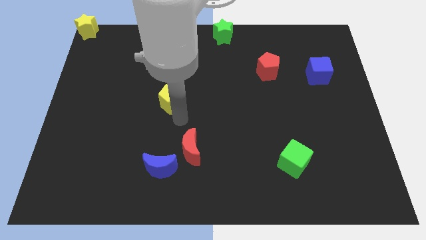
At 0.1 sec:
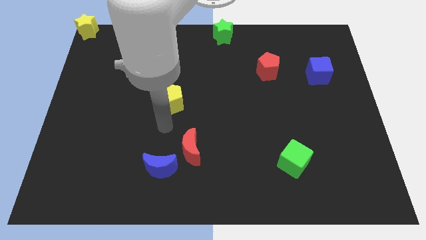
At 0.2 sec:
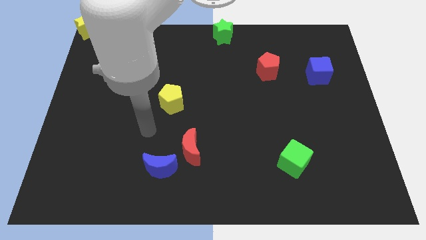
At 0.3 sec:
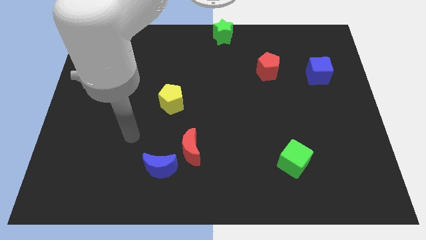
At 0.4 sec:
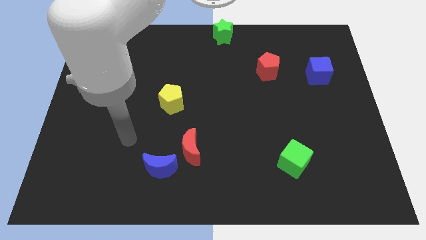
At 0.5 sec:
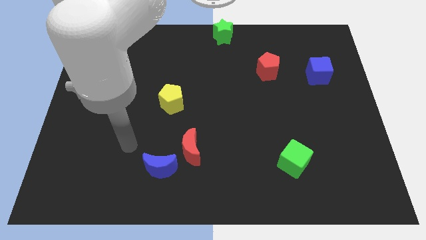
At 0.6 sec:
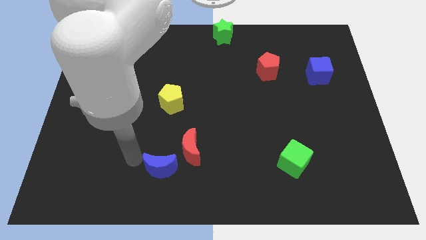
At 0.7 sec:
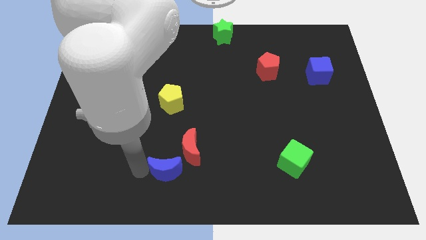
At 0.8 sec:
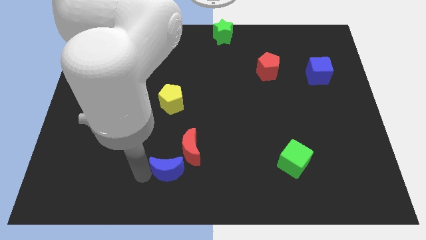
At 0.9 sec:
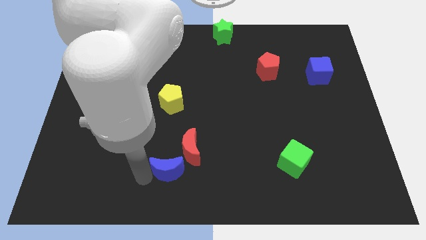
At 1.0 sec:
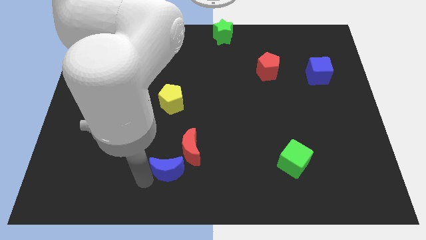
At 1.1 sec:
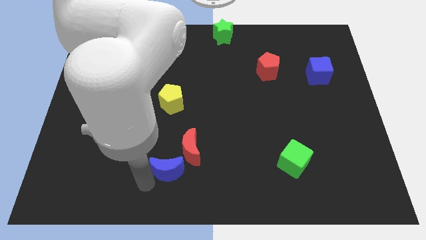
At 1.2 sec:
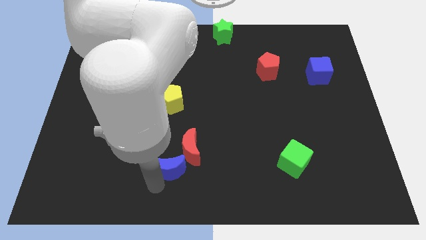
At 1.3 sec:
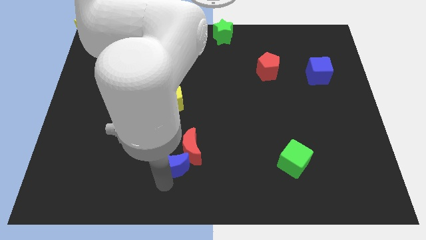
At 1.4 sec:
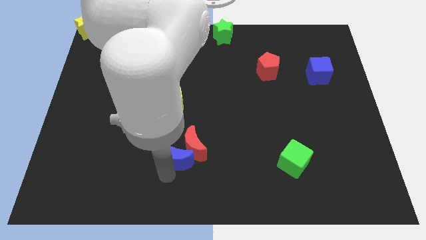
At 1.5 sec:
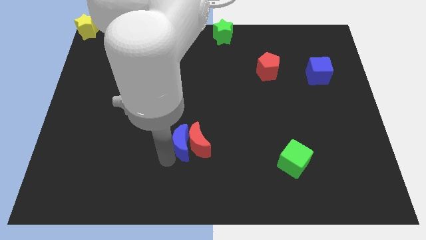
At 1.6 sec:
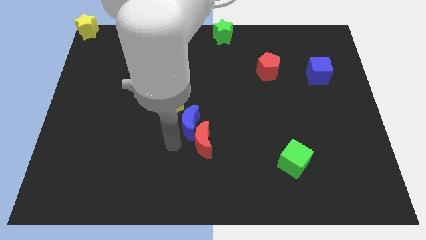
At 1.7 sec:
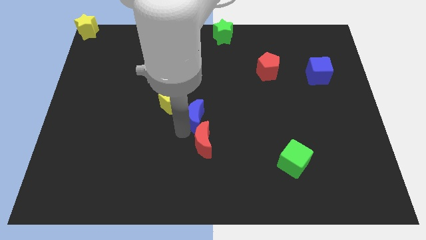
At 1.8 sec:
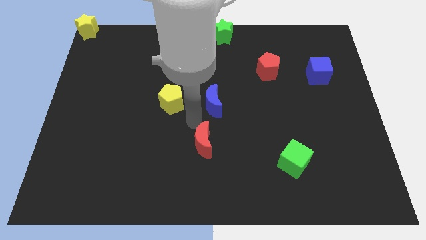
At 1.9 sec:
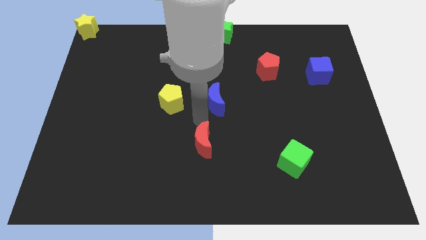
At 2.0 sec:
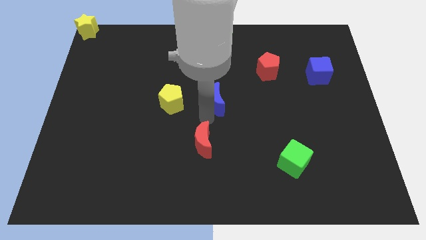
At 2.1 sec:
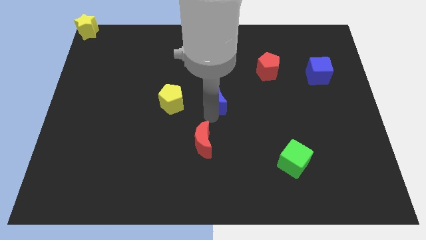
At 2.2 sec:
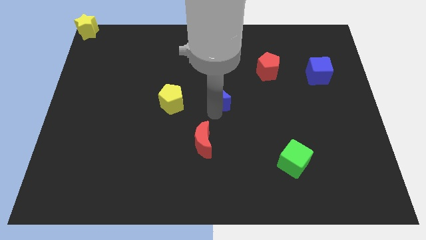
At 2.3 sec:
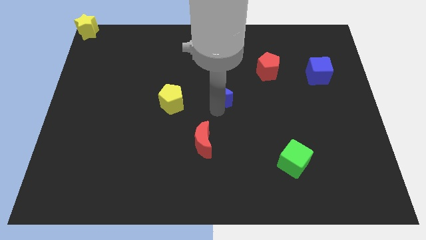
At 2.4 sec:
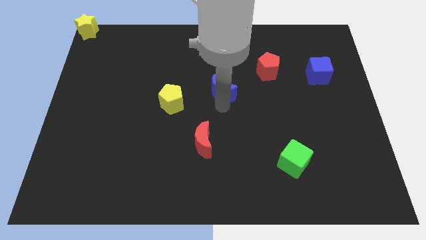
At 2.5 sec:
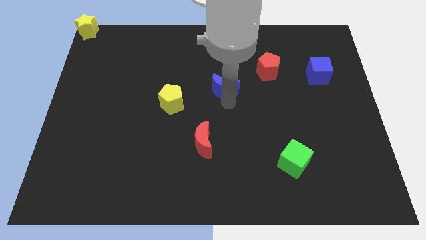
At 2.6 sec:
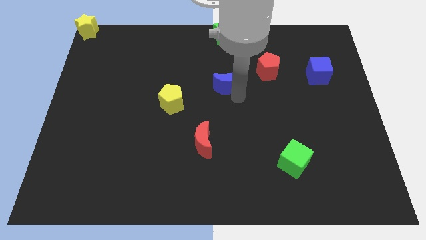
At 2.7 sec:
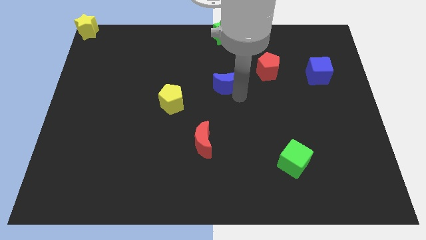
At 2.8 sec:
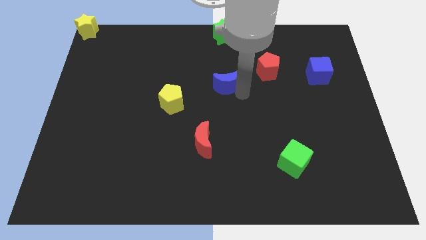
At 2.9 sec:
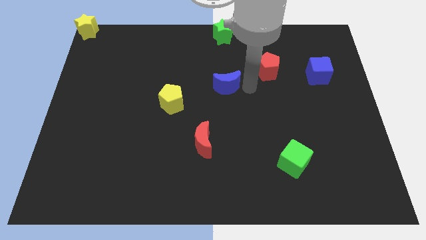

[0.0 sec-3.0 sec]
push the blue moon into the red moon

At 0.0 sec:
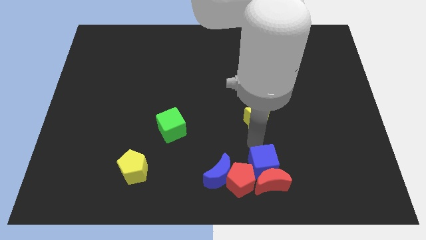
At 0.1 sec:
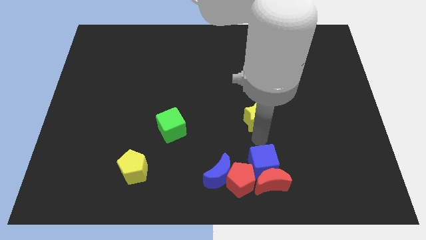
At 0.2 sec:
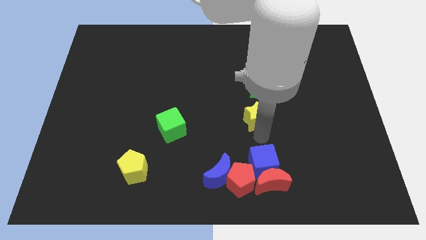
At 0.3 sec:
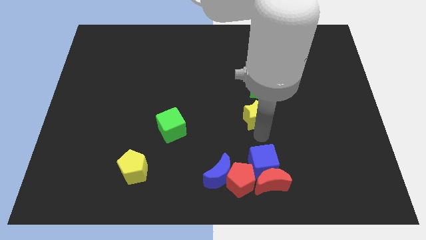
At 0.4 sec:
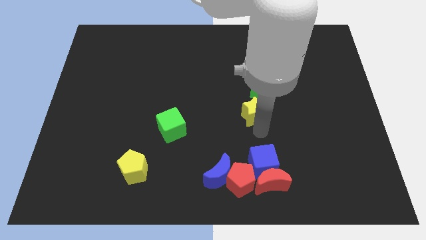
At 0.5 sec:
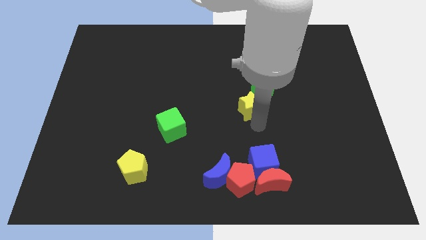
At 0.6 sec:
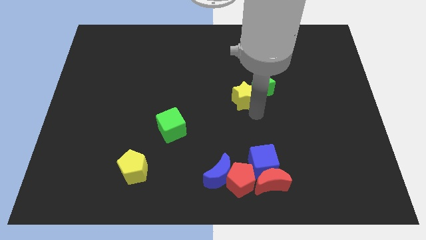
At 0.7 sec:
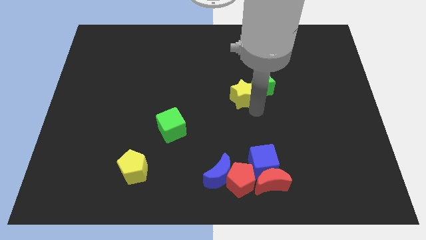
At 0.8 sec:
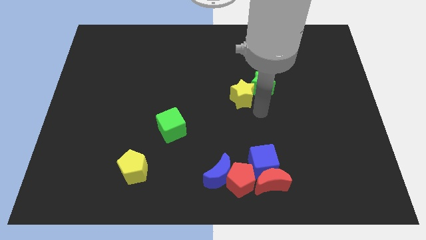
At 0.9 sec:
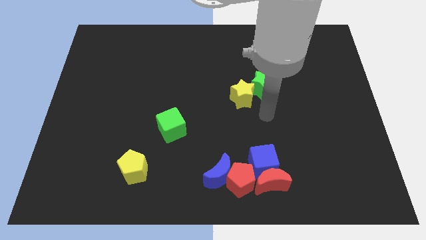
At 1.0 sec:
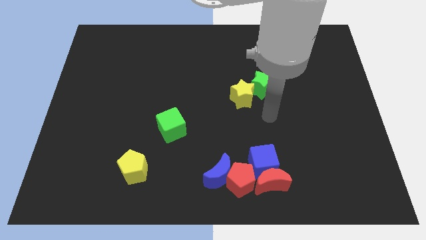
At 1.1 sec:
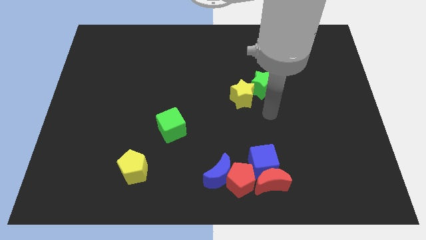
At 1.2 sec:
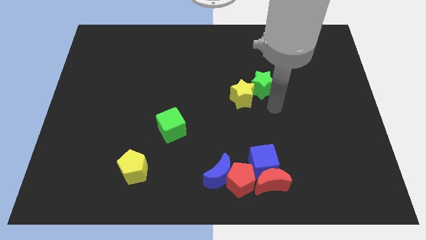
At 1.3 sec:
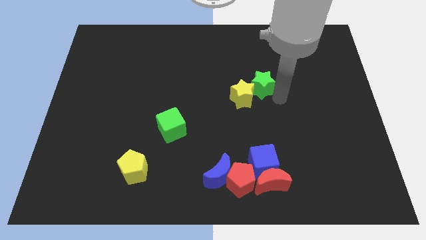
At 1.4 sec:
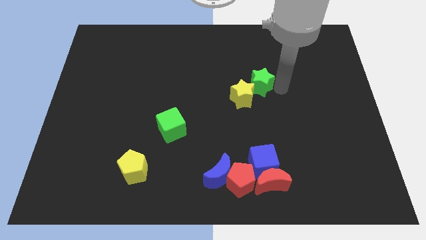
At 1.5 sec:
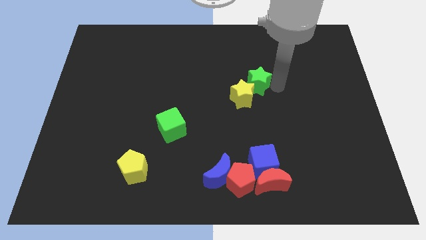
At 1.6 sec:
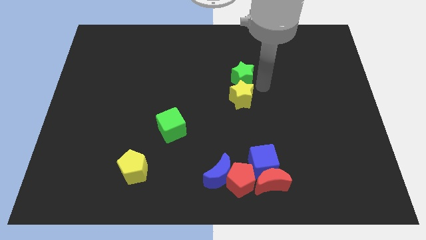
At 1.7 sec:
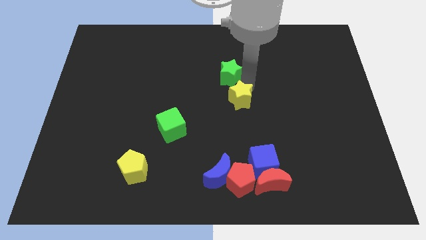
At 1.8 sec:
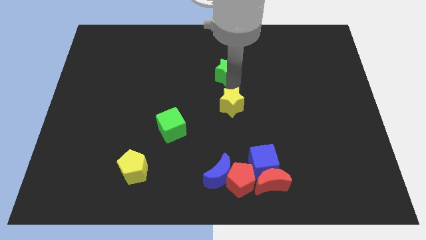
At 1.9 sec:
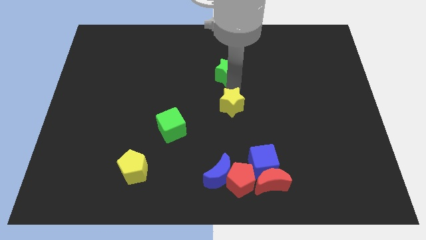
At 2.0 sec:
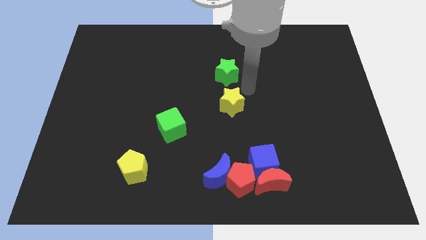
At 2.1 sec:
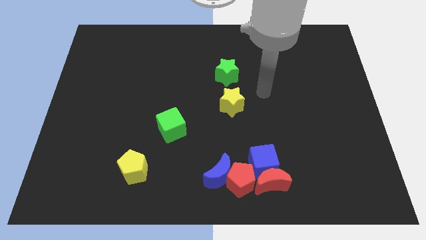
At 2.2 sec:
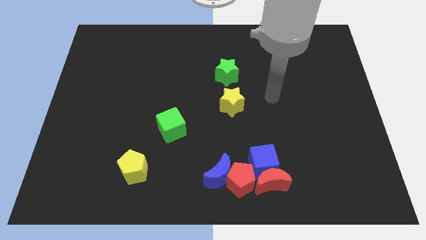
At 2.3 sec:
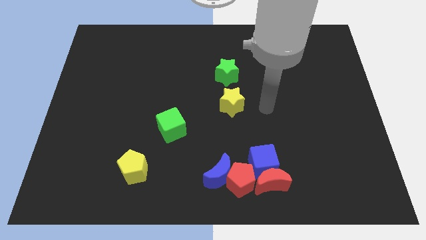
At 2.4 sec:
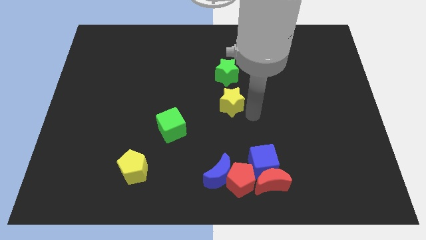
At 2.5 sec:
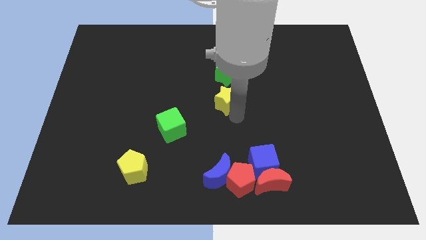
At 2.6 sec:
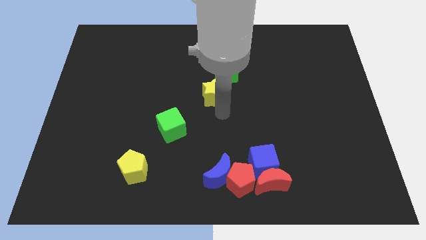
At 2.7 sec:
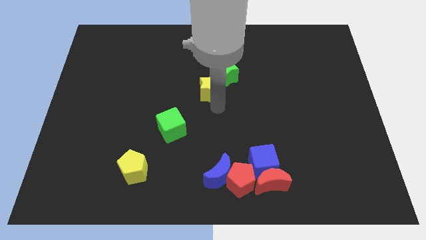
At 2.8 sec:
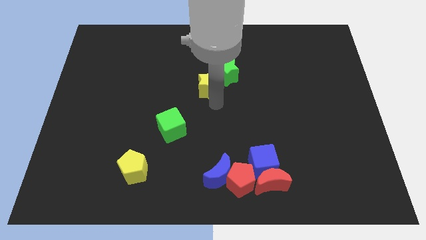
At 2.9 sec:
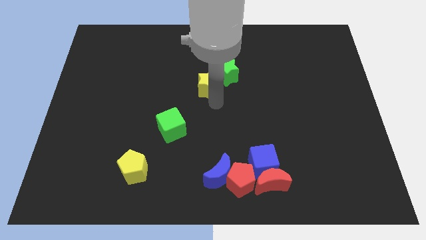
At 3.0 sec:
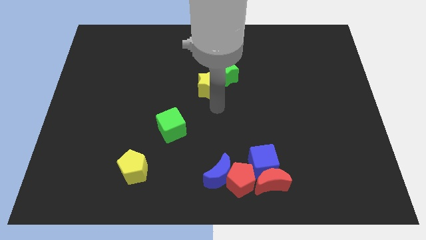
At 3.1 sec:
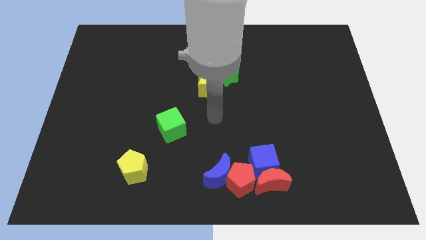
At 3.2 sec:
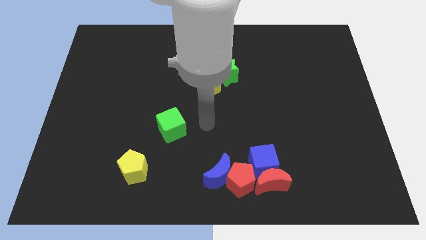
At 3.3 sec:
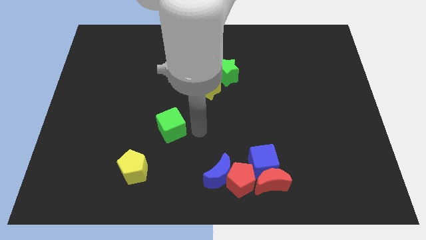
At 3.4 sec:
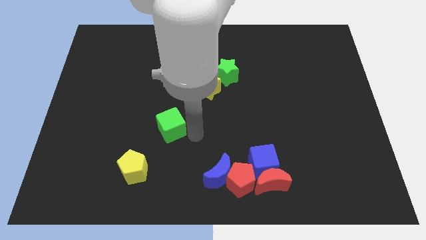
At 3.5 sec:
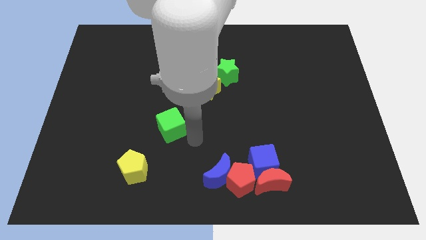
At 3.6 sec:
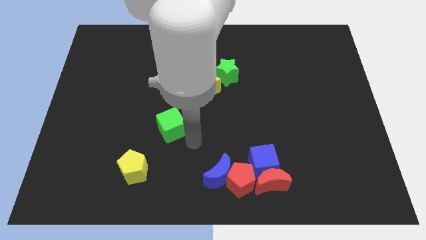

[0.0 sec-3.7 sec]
push the green and yellow stars towards the center

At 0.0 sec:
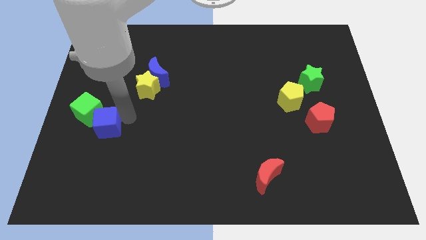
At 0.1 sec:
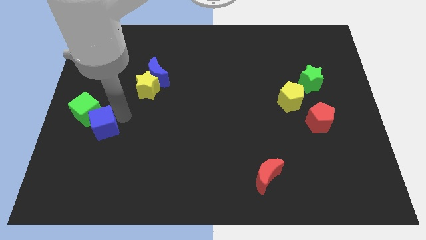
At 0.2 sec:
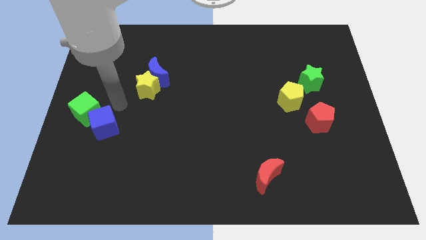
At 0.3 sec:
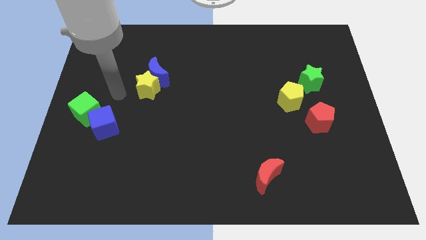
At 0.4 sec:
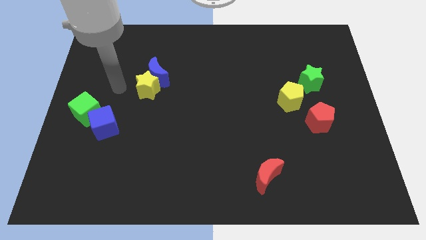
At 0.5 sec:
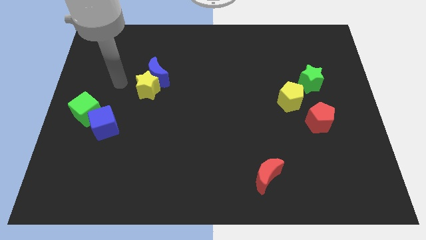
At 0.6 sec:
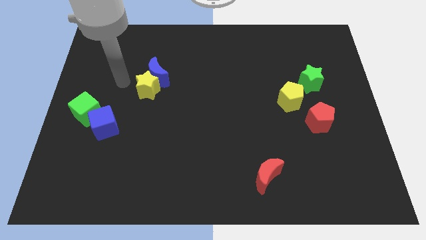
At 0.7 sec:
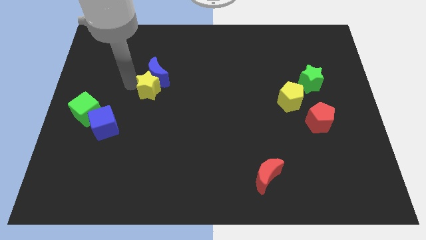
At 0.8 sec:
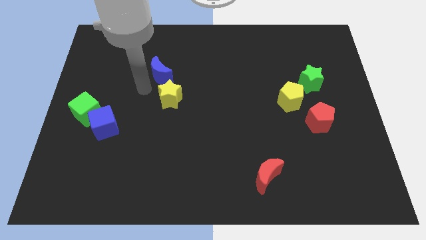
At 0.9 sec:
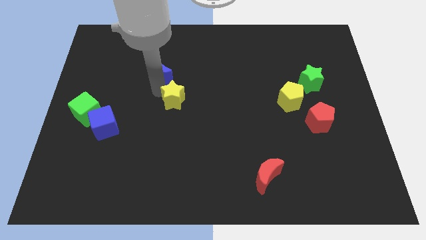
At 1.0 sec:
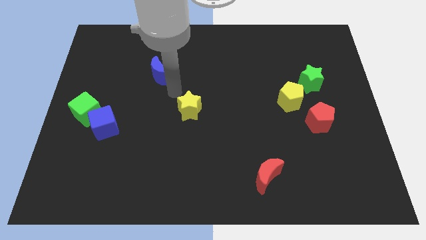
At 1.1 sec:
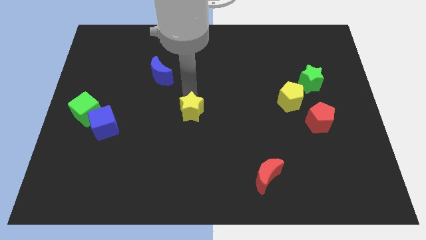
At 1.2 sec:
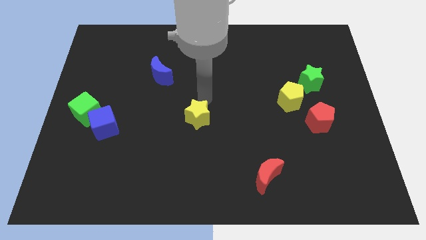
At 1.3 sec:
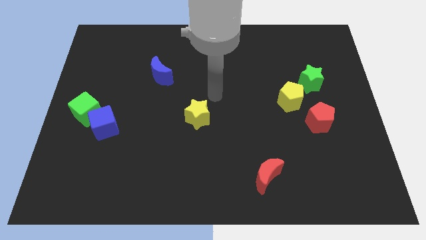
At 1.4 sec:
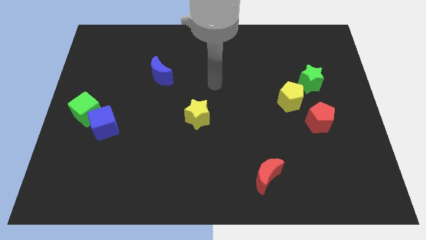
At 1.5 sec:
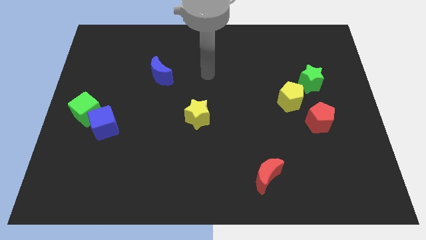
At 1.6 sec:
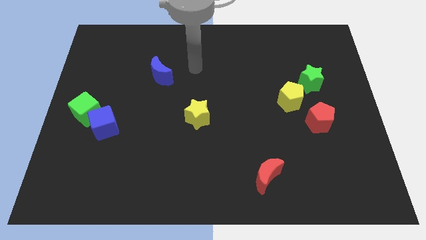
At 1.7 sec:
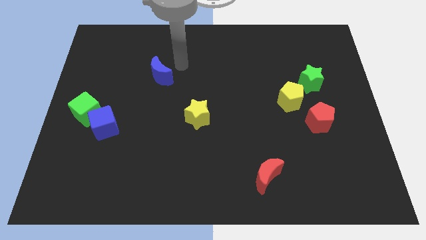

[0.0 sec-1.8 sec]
push the yellow star to the right of the blue cube

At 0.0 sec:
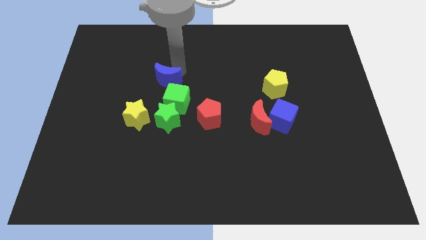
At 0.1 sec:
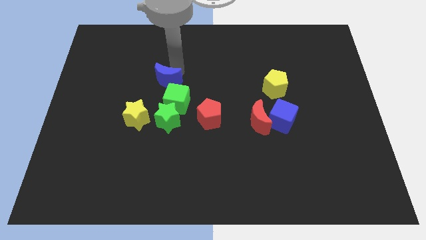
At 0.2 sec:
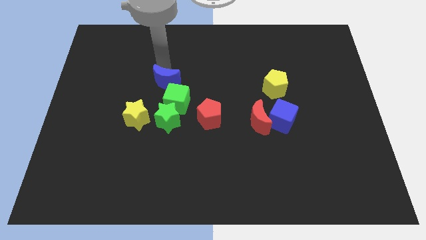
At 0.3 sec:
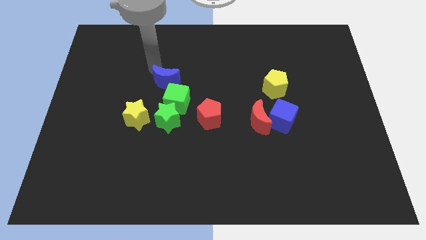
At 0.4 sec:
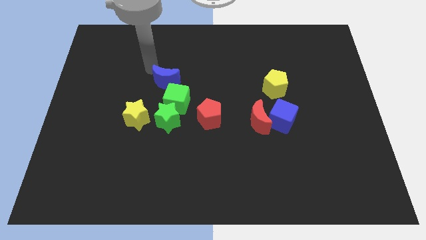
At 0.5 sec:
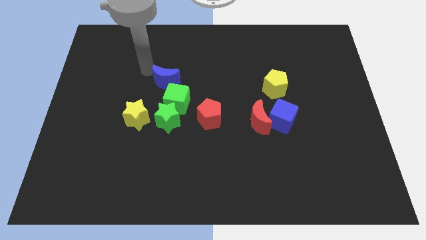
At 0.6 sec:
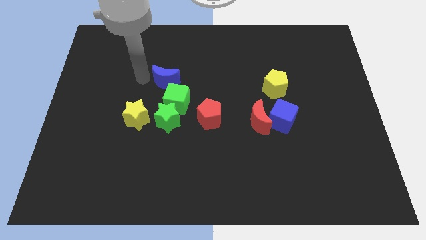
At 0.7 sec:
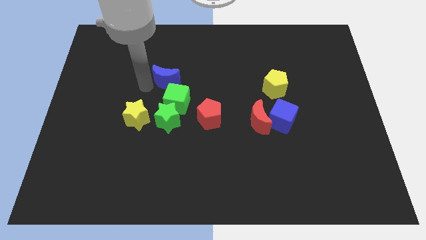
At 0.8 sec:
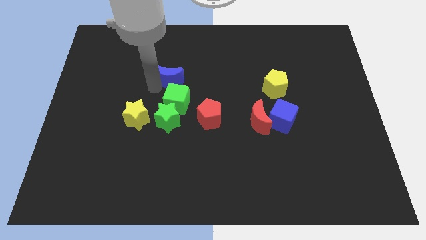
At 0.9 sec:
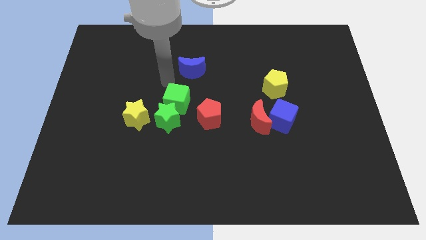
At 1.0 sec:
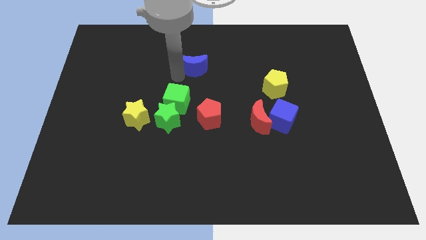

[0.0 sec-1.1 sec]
separate blue moon from green cube
